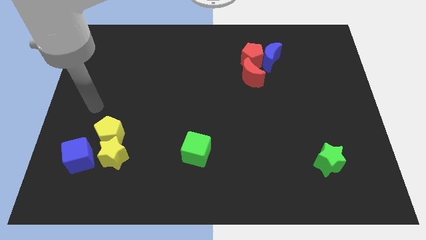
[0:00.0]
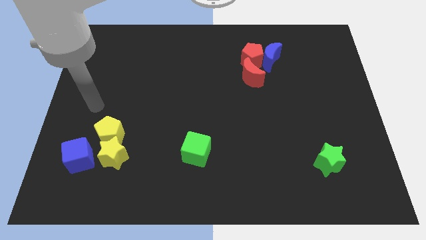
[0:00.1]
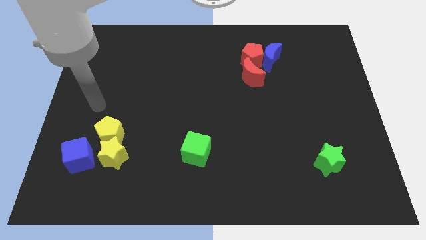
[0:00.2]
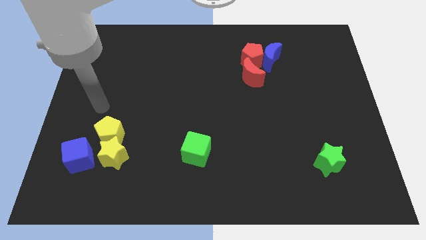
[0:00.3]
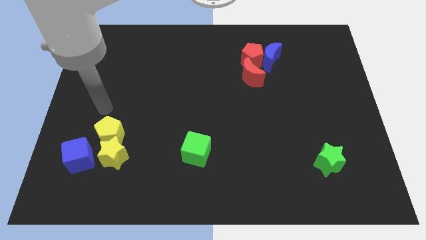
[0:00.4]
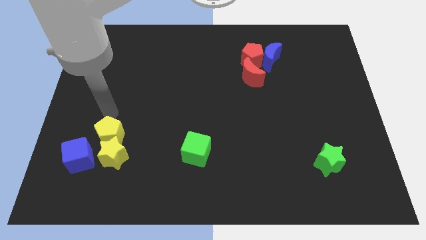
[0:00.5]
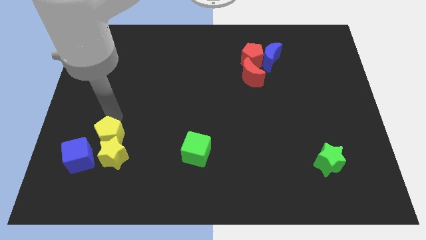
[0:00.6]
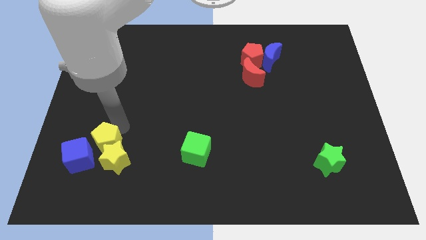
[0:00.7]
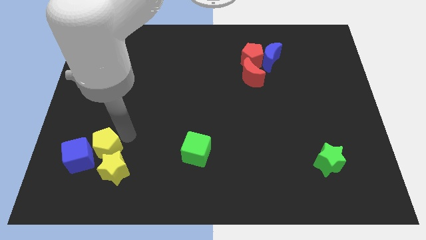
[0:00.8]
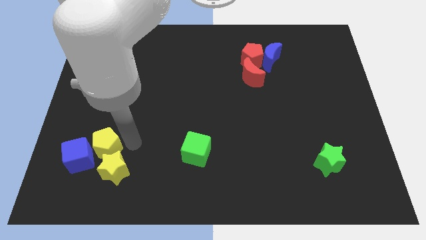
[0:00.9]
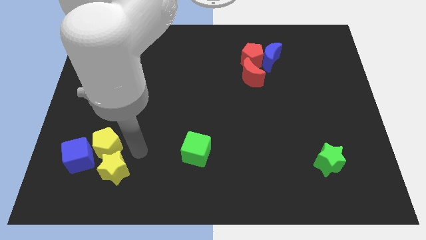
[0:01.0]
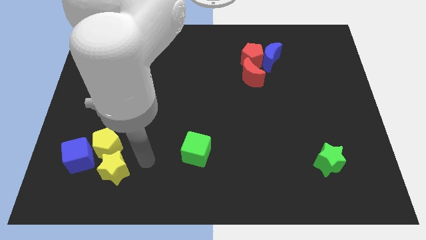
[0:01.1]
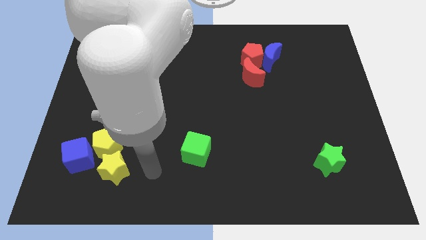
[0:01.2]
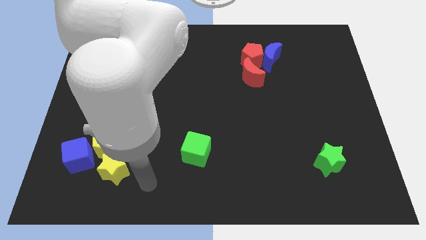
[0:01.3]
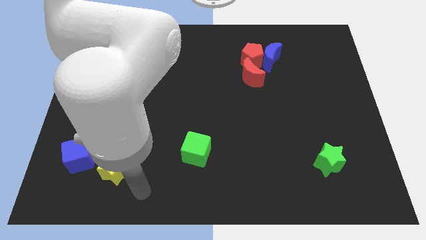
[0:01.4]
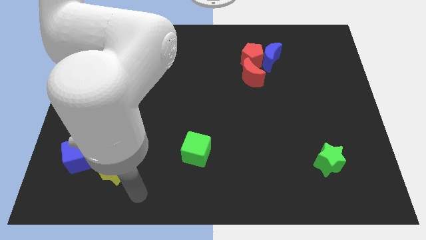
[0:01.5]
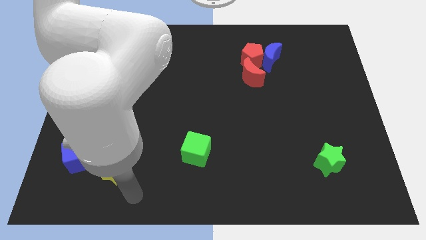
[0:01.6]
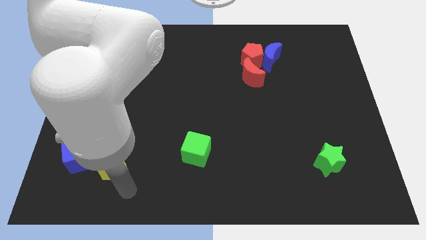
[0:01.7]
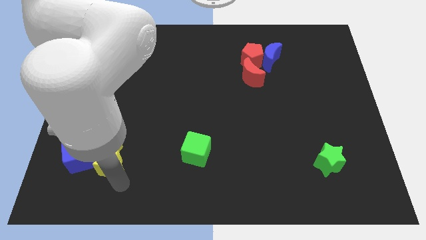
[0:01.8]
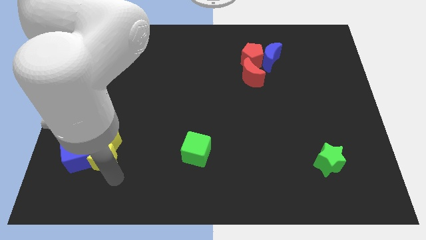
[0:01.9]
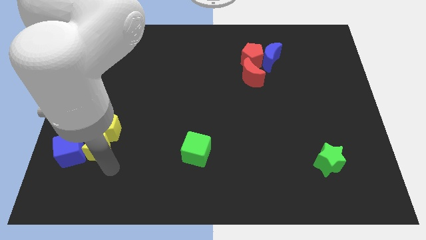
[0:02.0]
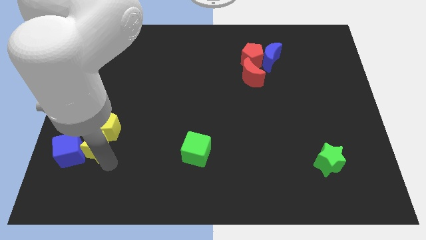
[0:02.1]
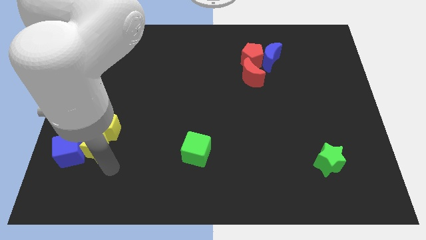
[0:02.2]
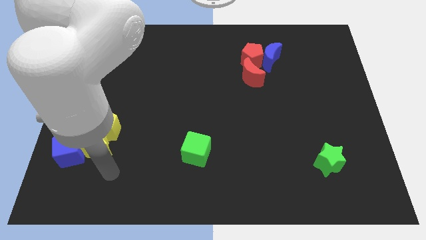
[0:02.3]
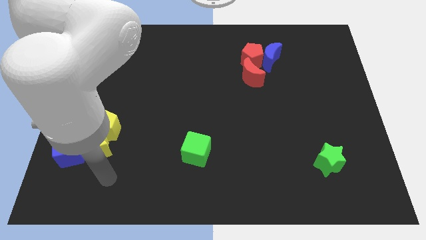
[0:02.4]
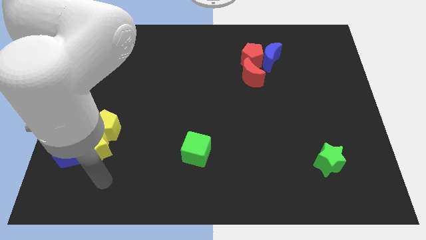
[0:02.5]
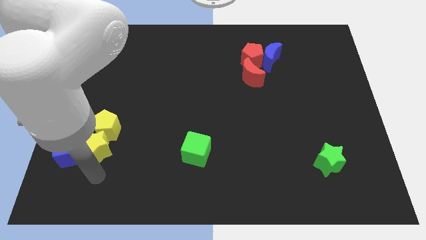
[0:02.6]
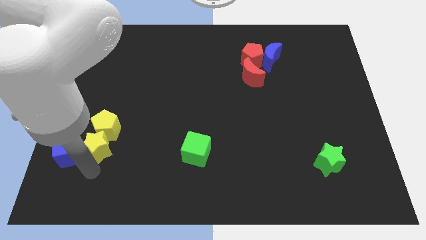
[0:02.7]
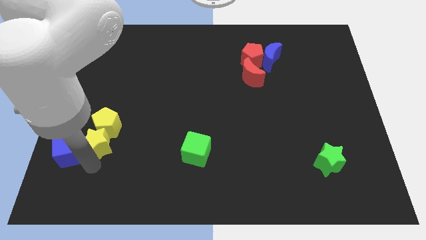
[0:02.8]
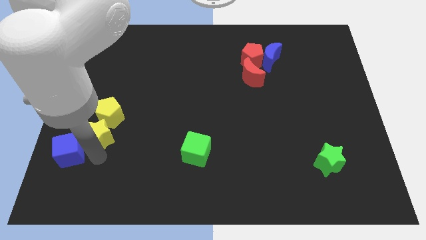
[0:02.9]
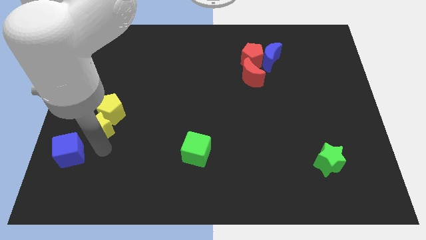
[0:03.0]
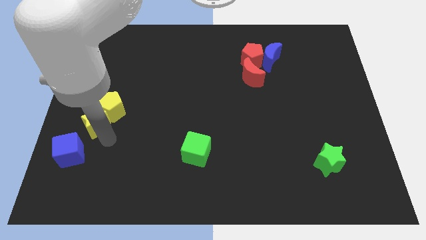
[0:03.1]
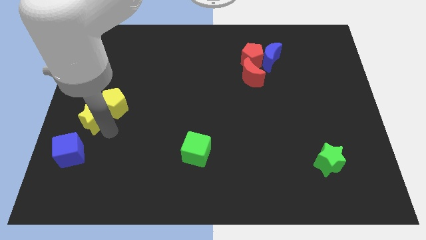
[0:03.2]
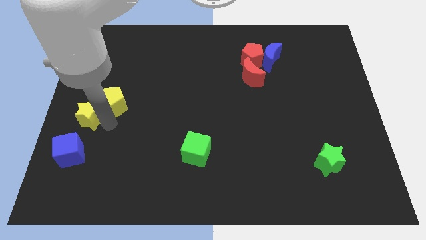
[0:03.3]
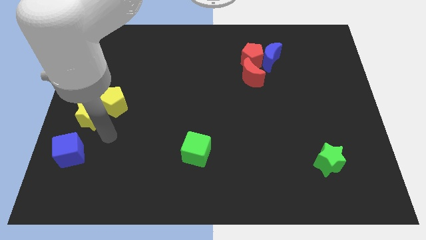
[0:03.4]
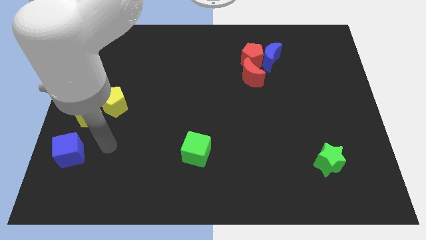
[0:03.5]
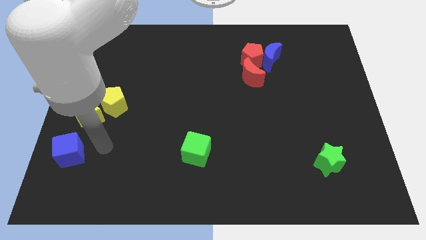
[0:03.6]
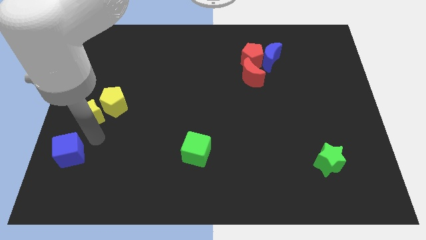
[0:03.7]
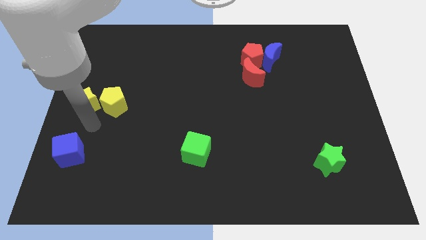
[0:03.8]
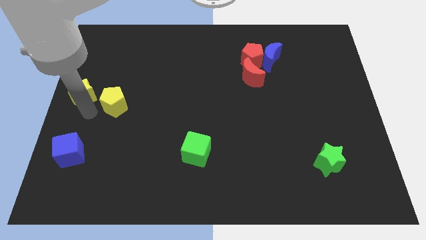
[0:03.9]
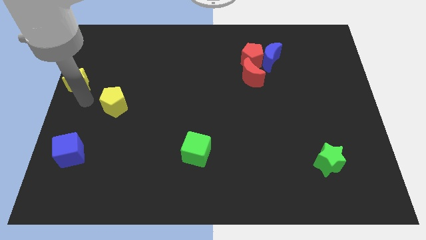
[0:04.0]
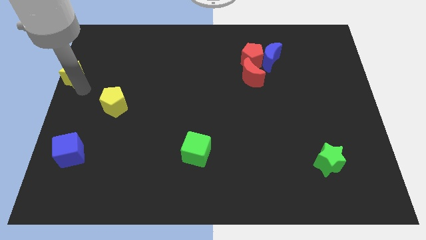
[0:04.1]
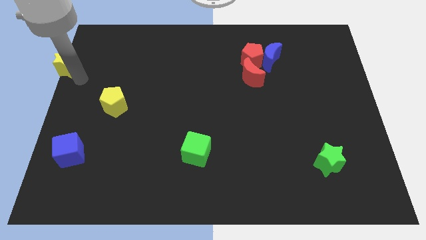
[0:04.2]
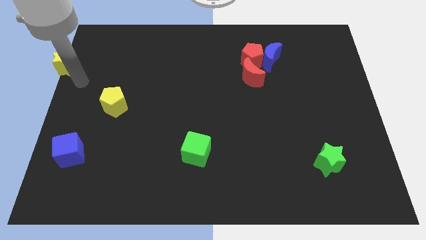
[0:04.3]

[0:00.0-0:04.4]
separate the yellow star from the yellow pentagon and the blue cube

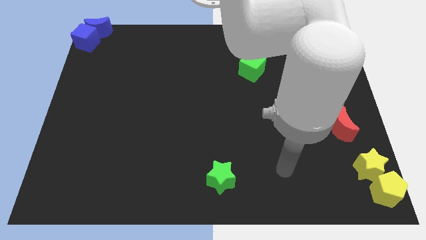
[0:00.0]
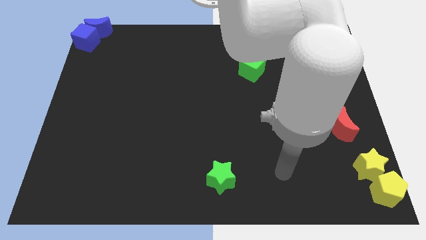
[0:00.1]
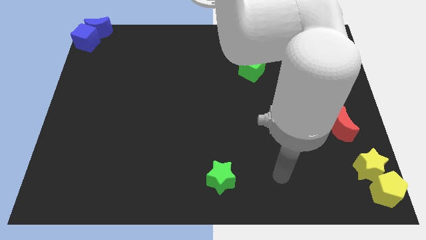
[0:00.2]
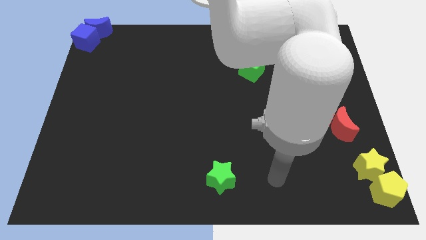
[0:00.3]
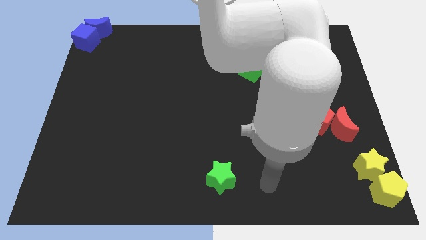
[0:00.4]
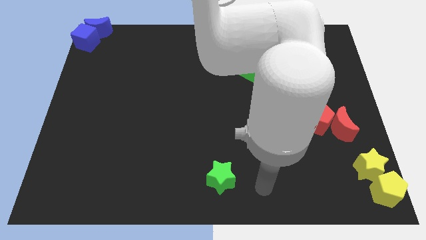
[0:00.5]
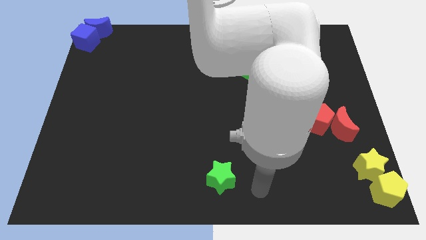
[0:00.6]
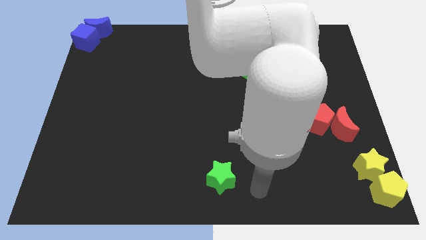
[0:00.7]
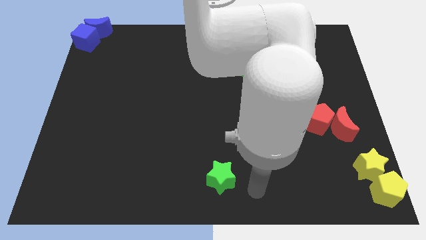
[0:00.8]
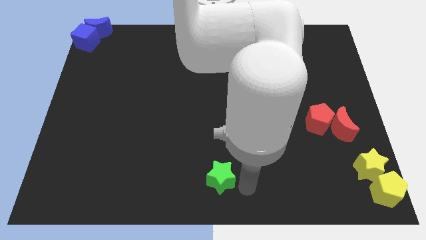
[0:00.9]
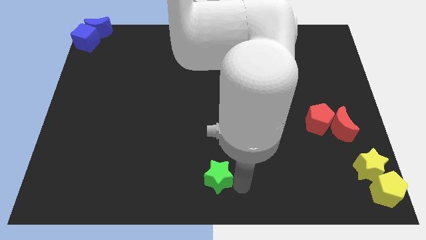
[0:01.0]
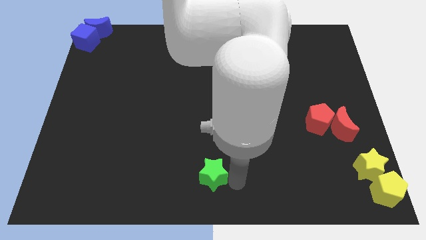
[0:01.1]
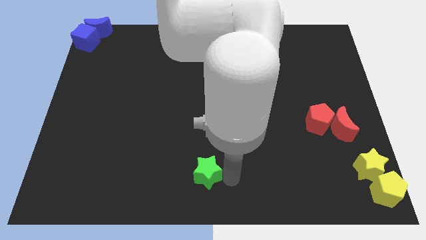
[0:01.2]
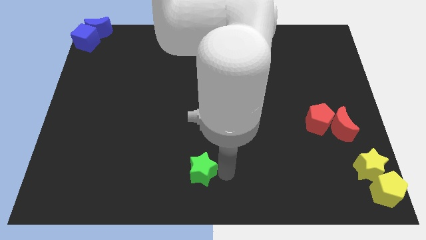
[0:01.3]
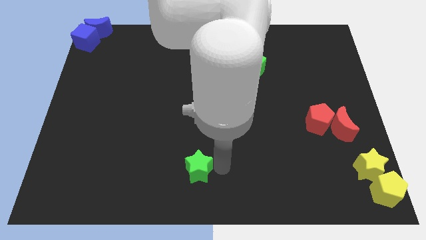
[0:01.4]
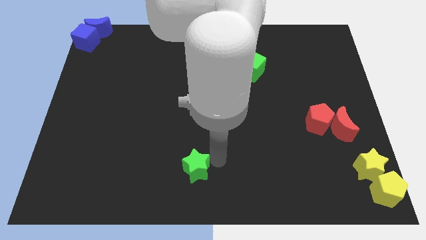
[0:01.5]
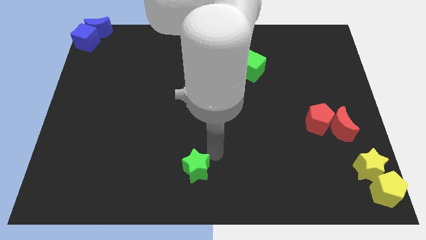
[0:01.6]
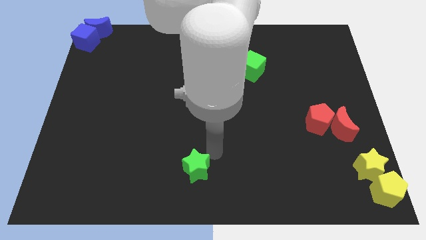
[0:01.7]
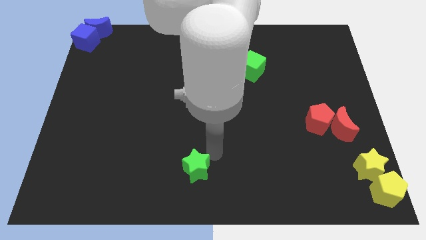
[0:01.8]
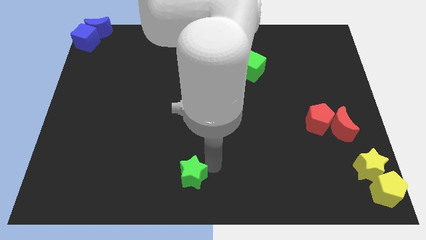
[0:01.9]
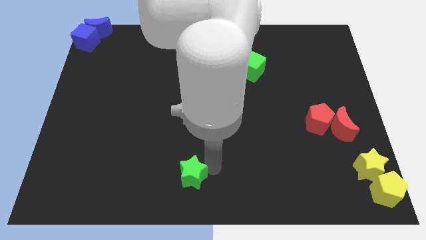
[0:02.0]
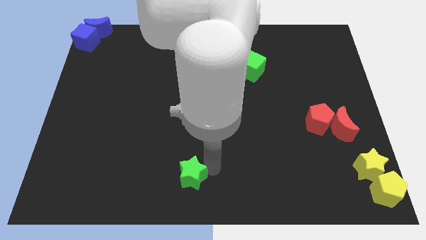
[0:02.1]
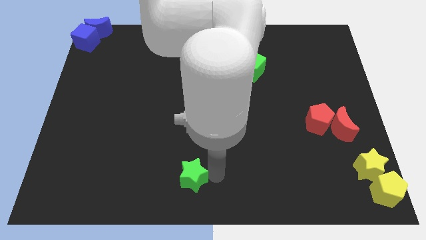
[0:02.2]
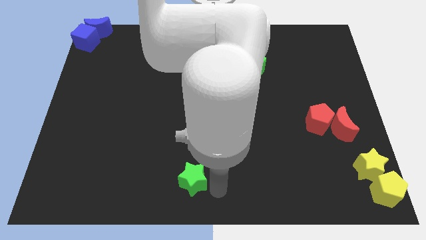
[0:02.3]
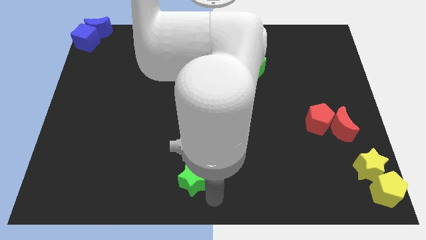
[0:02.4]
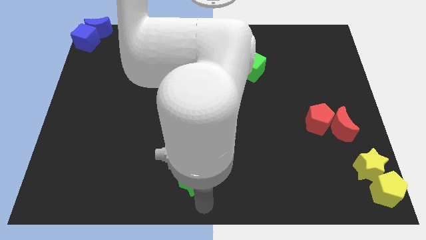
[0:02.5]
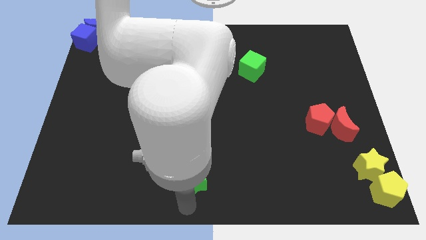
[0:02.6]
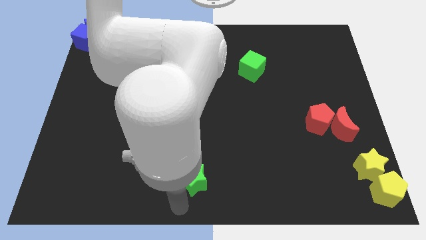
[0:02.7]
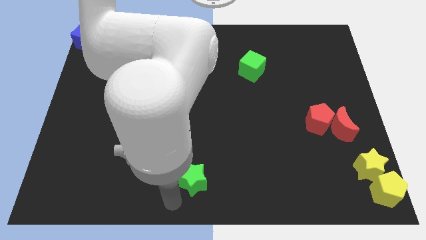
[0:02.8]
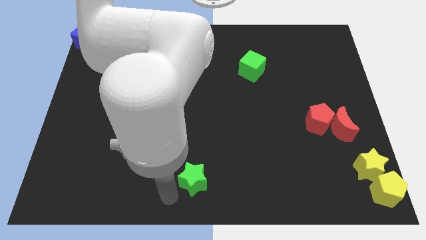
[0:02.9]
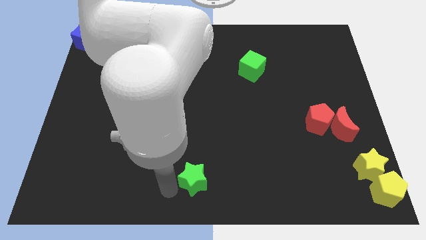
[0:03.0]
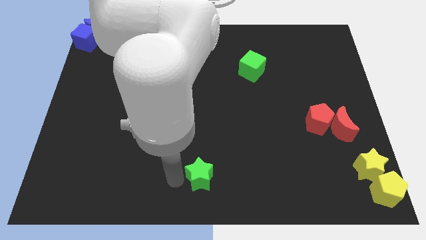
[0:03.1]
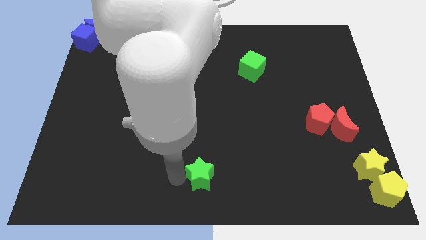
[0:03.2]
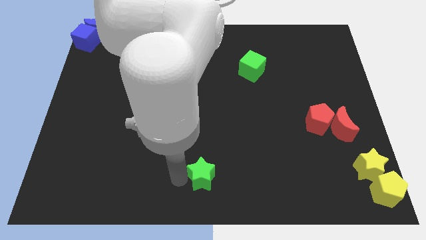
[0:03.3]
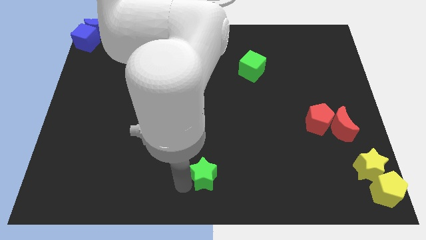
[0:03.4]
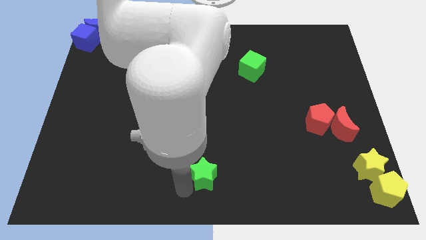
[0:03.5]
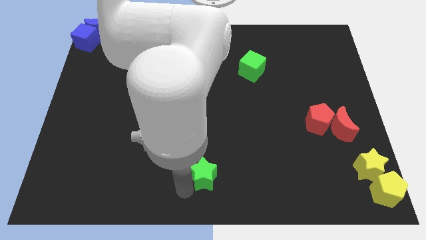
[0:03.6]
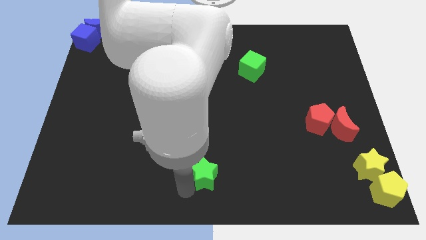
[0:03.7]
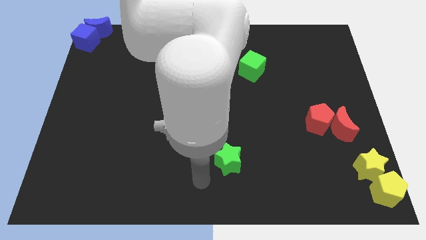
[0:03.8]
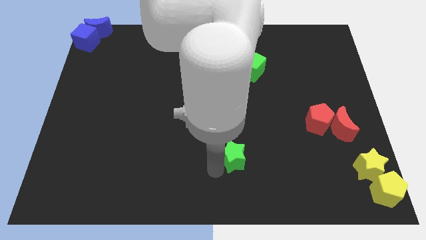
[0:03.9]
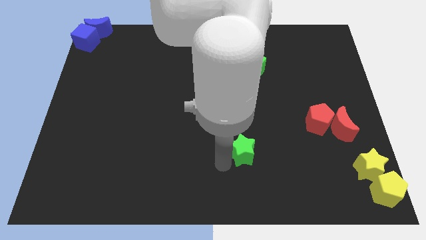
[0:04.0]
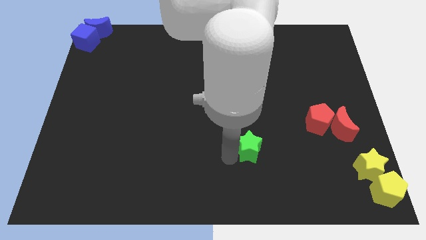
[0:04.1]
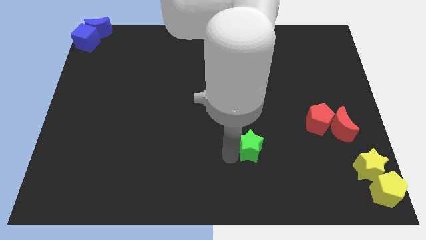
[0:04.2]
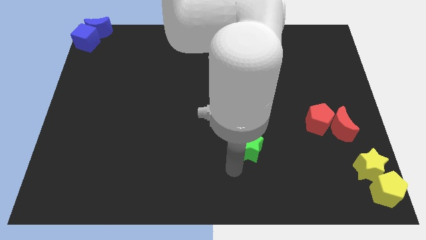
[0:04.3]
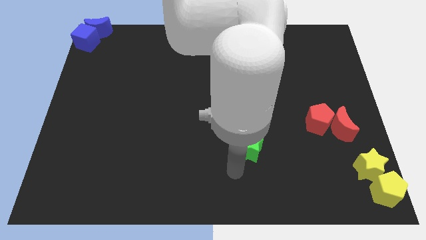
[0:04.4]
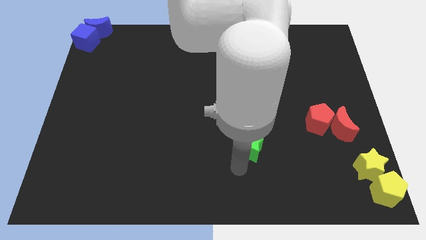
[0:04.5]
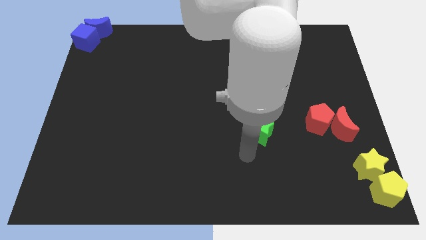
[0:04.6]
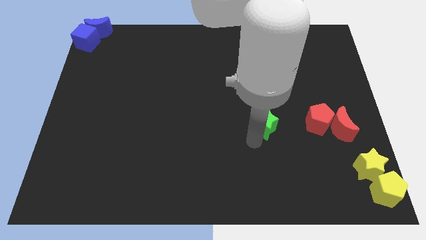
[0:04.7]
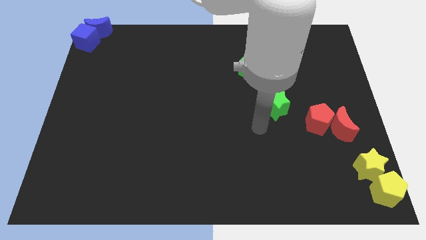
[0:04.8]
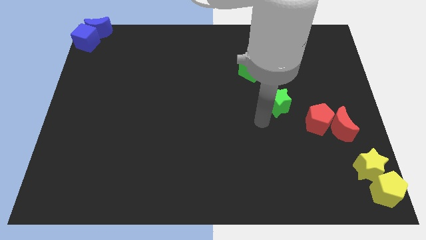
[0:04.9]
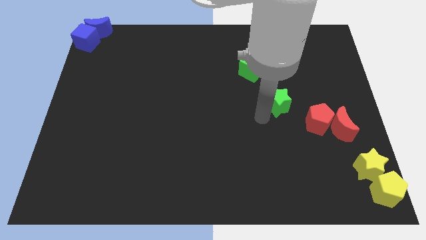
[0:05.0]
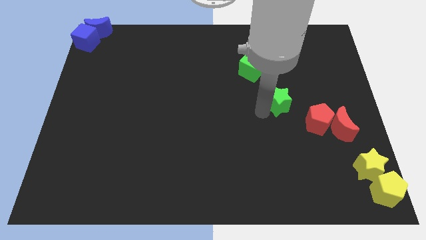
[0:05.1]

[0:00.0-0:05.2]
push the green star diagonally top left to the red pentagon
